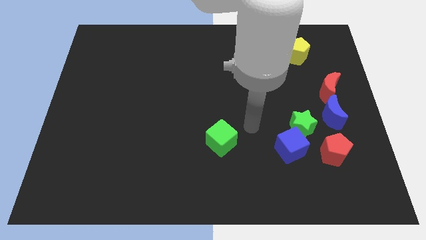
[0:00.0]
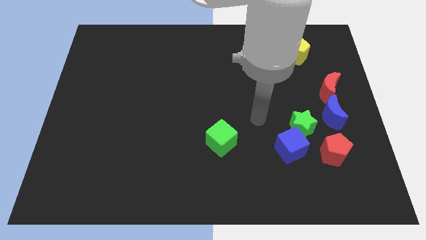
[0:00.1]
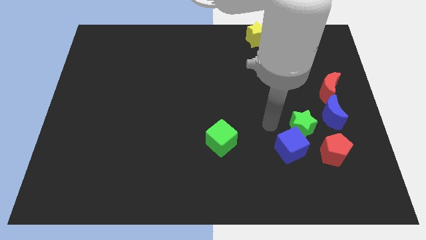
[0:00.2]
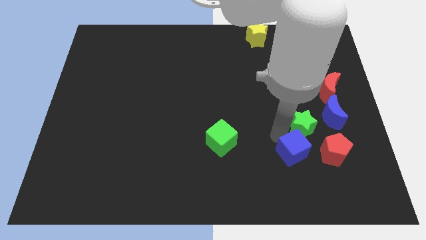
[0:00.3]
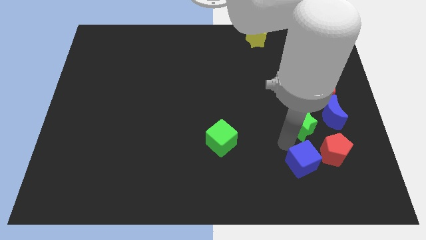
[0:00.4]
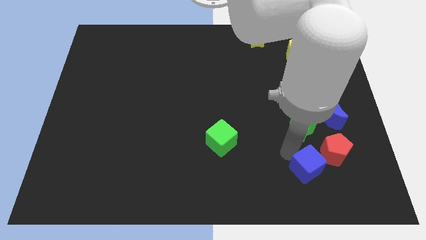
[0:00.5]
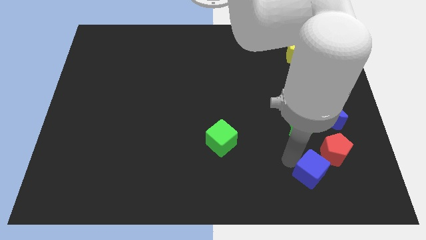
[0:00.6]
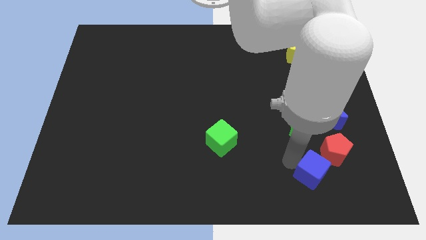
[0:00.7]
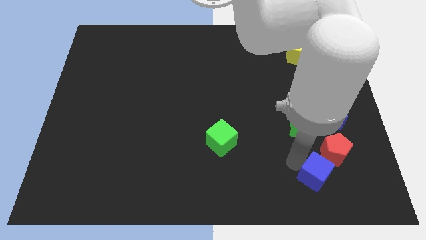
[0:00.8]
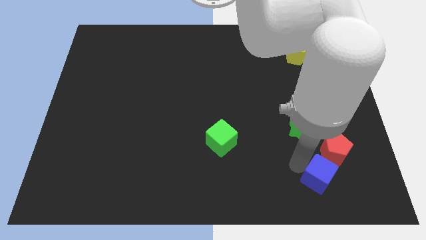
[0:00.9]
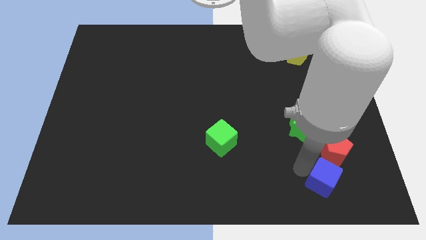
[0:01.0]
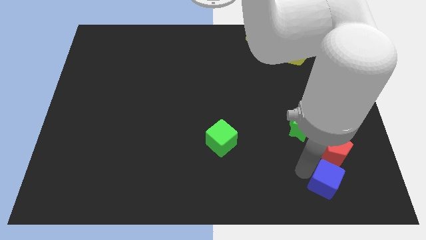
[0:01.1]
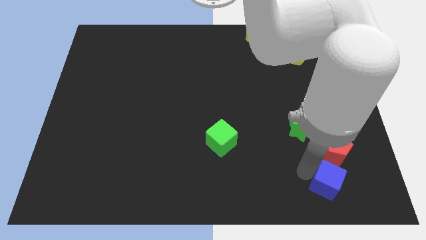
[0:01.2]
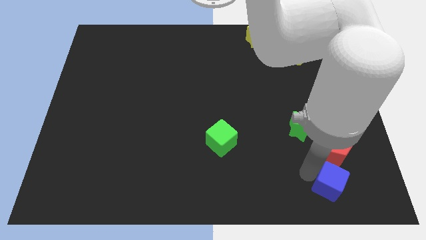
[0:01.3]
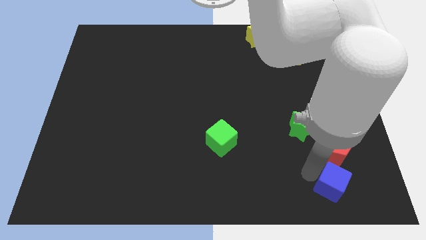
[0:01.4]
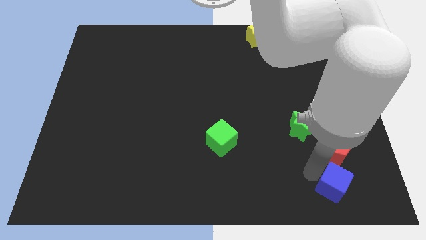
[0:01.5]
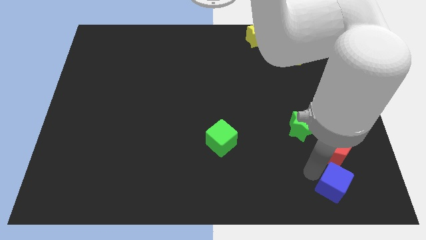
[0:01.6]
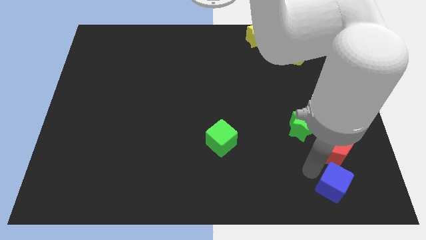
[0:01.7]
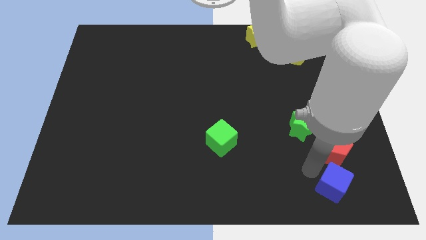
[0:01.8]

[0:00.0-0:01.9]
slide the blue cube vertically below the red pentagon

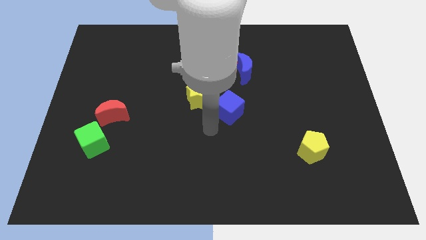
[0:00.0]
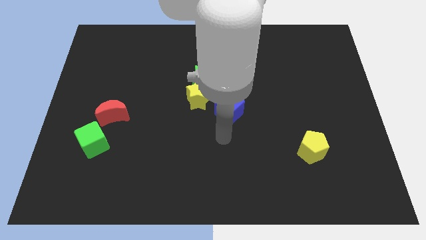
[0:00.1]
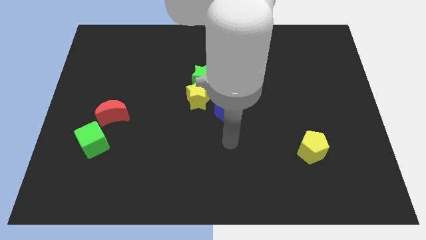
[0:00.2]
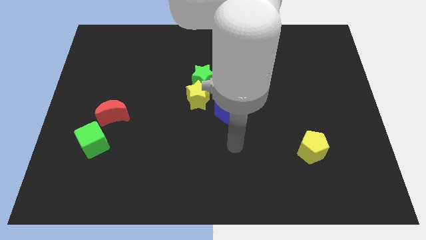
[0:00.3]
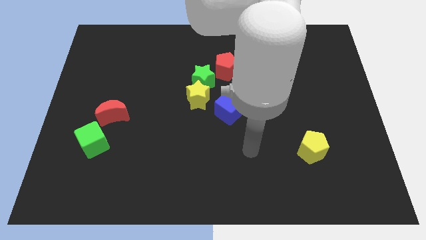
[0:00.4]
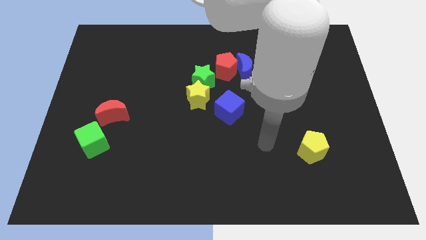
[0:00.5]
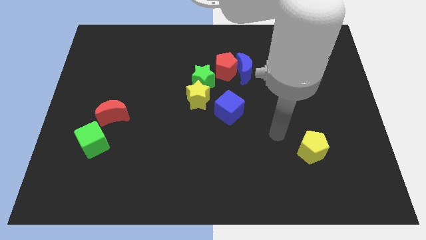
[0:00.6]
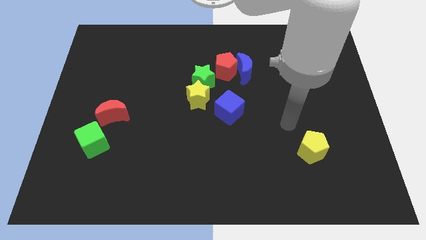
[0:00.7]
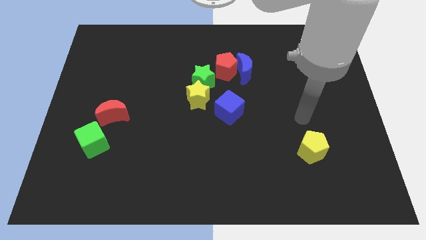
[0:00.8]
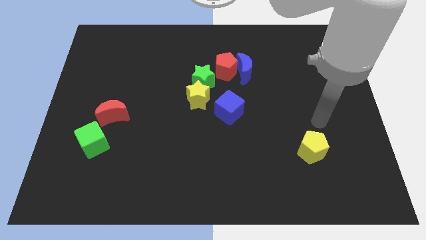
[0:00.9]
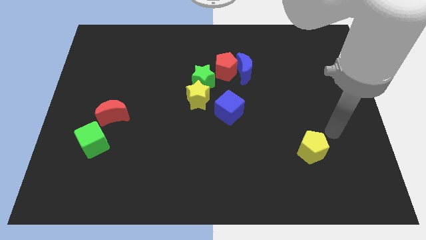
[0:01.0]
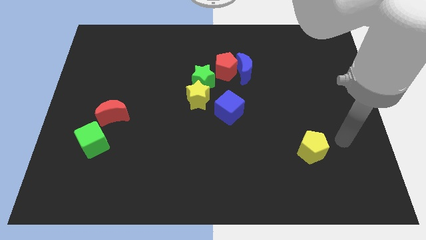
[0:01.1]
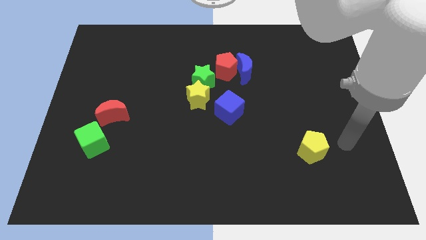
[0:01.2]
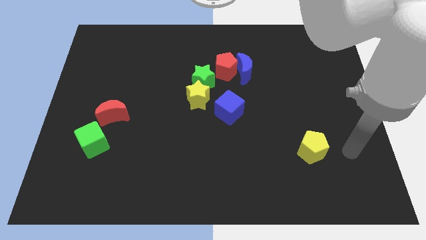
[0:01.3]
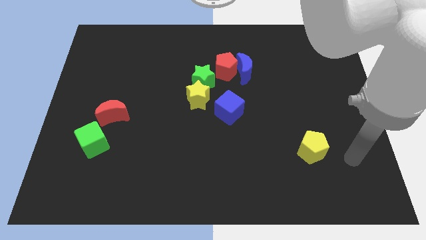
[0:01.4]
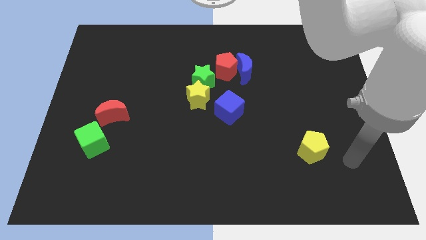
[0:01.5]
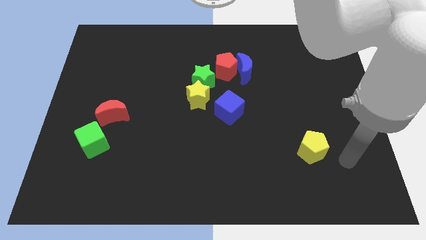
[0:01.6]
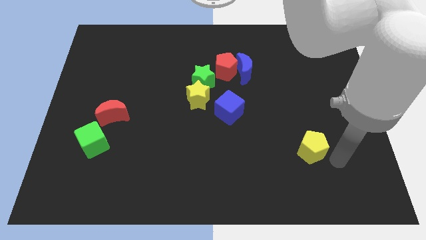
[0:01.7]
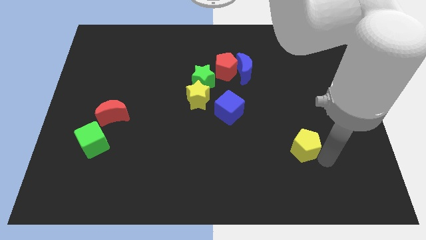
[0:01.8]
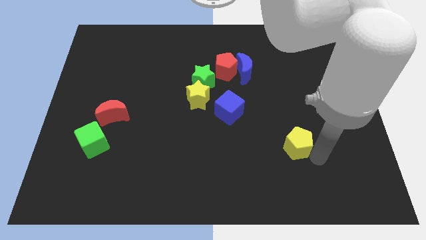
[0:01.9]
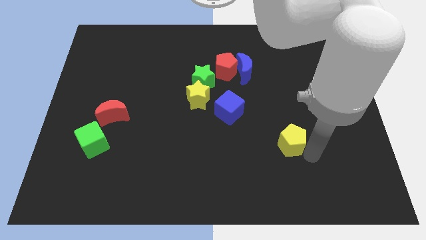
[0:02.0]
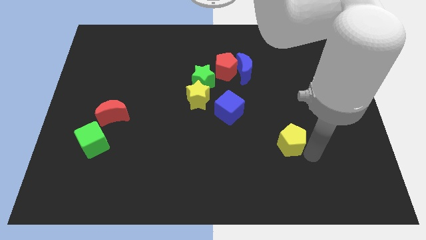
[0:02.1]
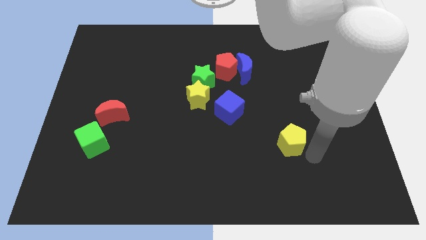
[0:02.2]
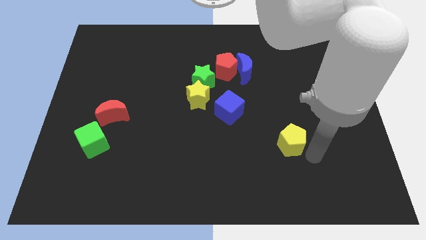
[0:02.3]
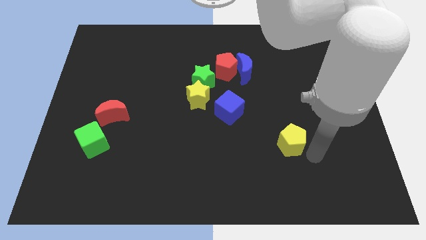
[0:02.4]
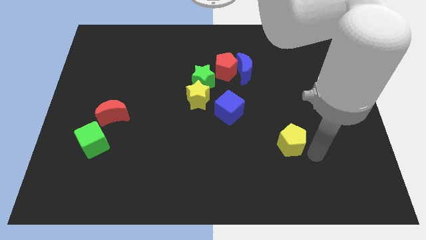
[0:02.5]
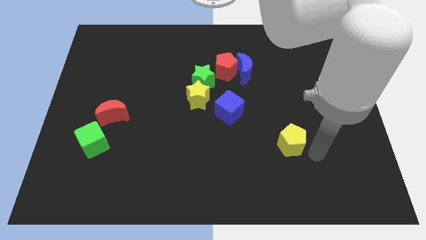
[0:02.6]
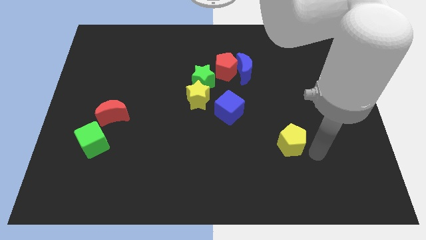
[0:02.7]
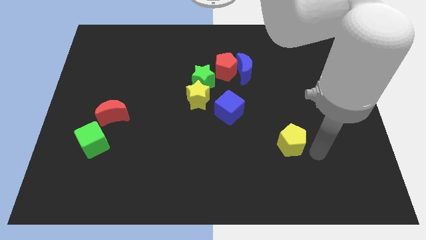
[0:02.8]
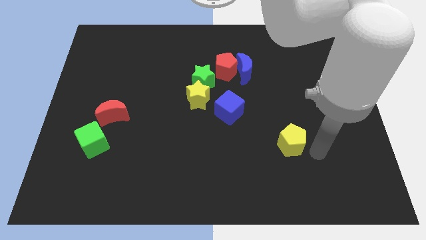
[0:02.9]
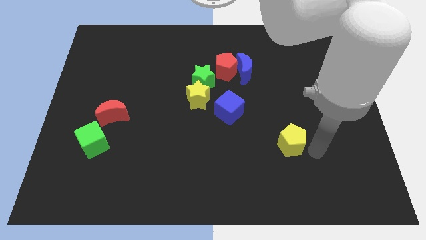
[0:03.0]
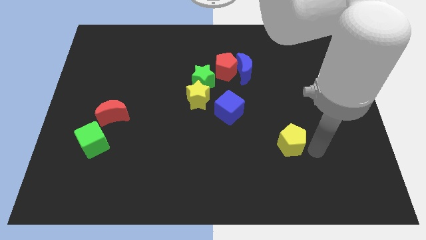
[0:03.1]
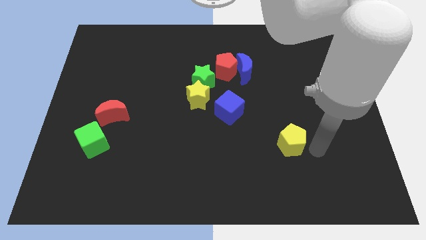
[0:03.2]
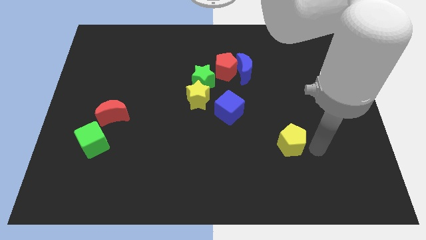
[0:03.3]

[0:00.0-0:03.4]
move the yellow pentagon towards the blue cube

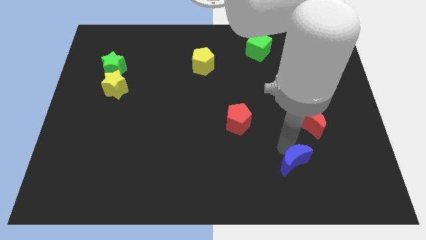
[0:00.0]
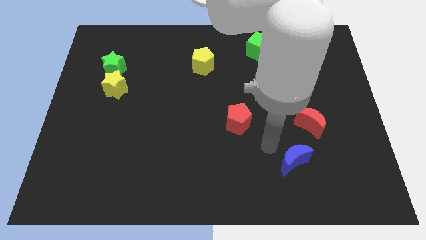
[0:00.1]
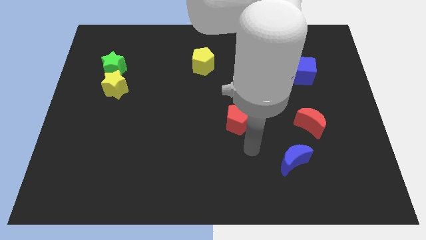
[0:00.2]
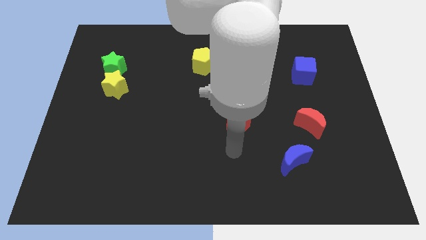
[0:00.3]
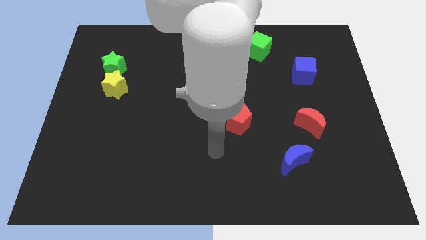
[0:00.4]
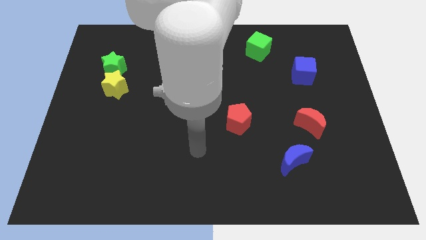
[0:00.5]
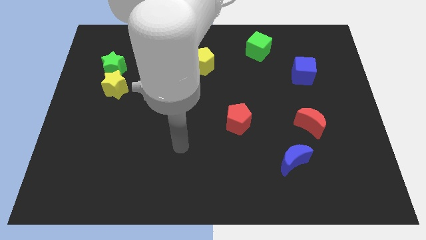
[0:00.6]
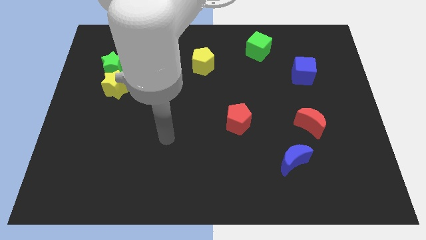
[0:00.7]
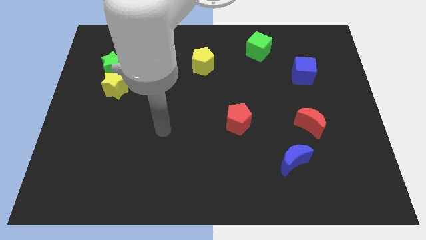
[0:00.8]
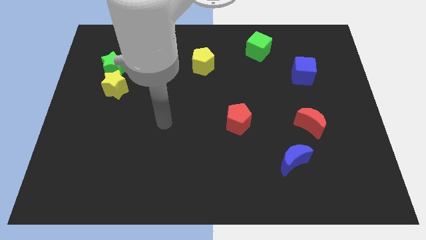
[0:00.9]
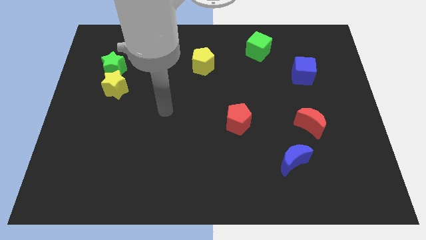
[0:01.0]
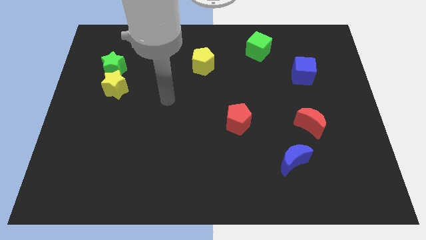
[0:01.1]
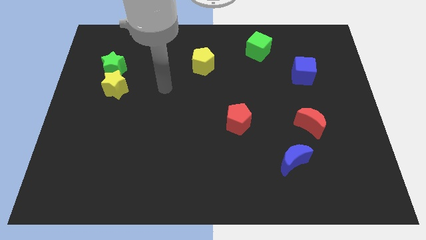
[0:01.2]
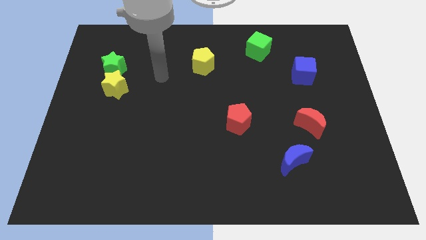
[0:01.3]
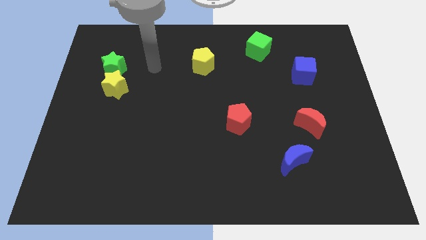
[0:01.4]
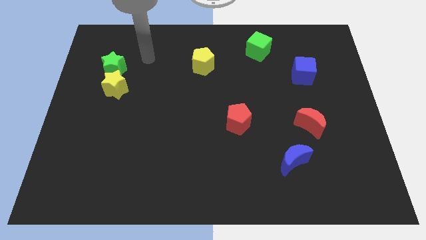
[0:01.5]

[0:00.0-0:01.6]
move away from the blue moon

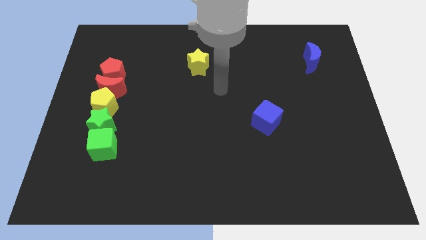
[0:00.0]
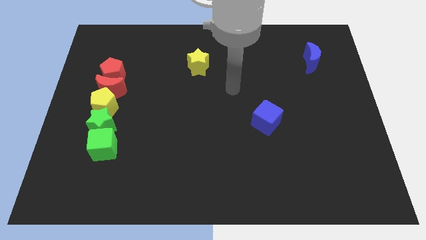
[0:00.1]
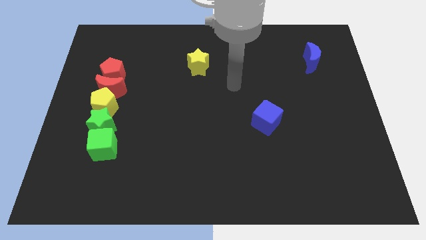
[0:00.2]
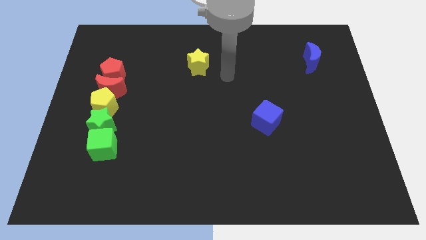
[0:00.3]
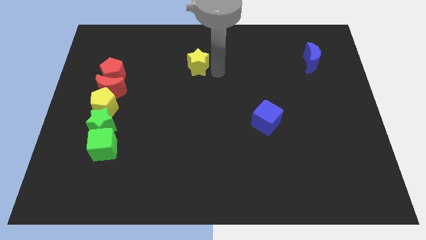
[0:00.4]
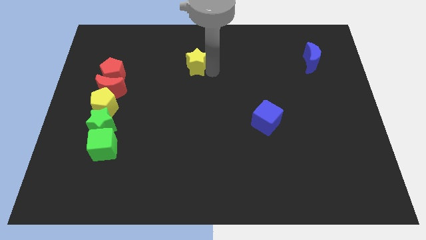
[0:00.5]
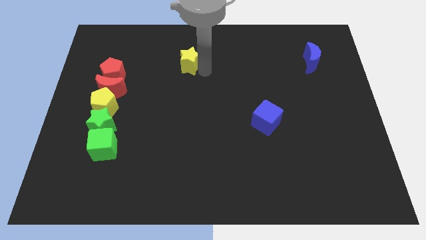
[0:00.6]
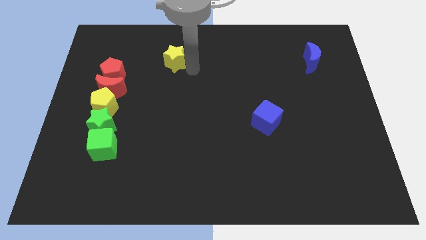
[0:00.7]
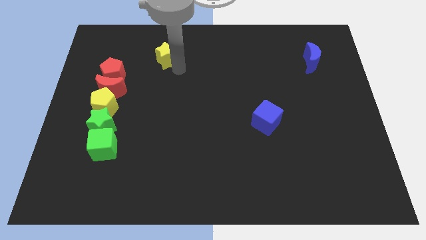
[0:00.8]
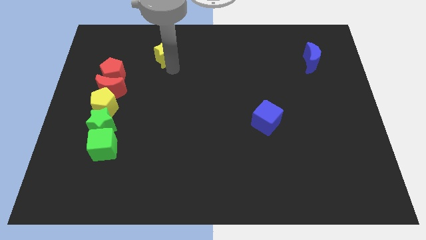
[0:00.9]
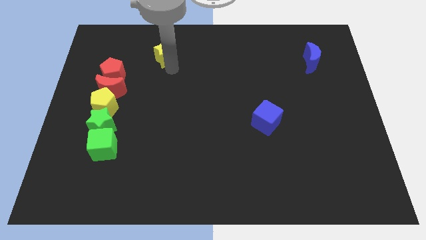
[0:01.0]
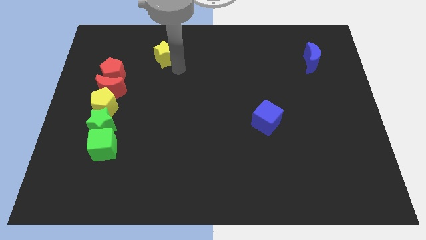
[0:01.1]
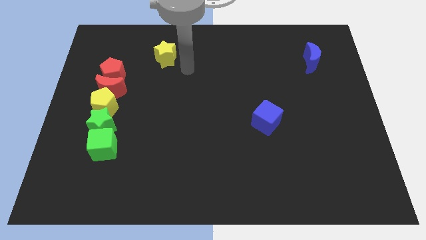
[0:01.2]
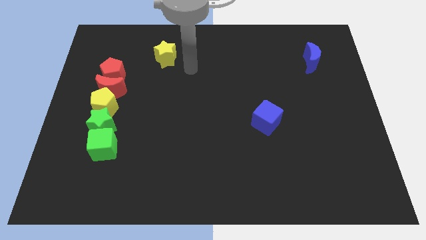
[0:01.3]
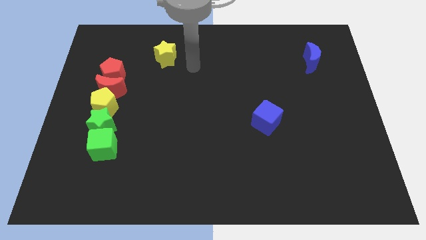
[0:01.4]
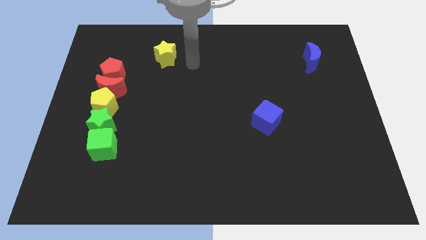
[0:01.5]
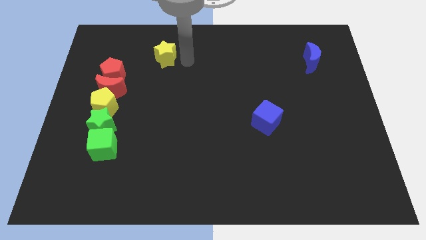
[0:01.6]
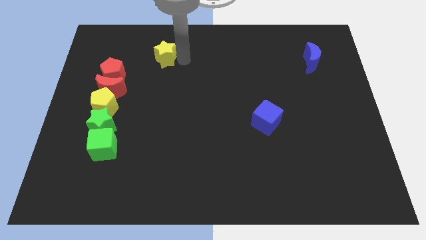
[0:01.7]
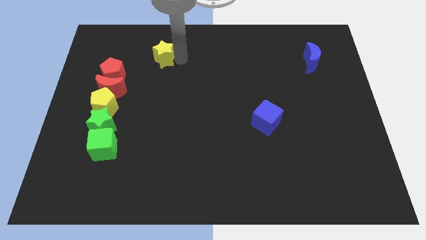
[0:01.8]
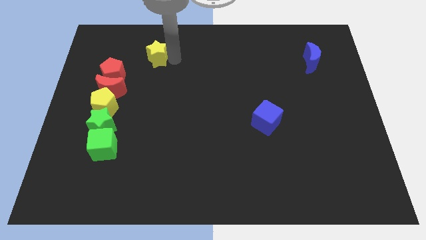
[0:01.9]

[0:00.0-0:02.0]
push the yellow star to the left
